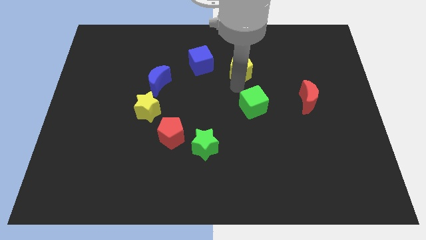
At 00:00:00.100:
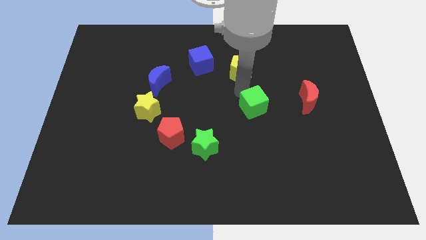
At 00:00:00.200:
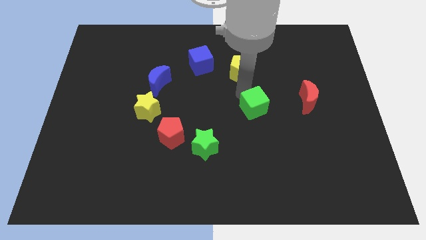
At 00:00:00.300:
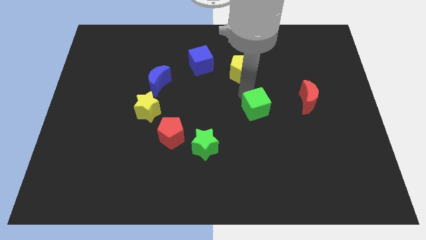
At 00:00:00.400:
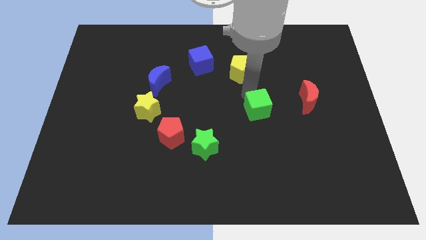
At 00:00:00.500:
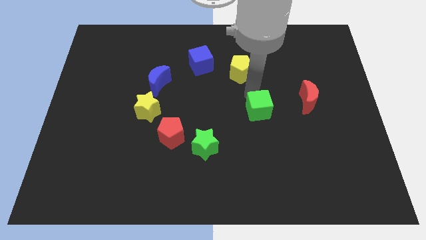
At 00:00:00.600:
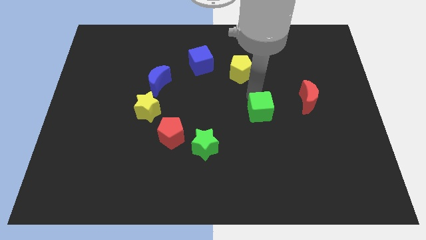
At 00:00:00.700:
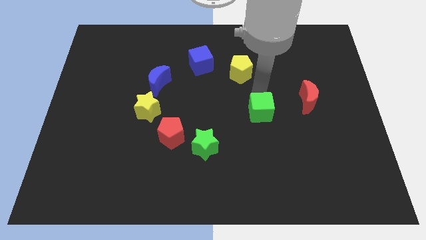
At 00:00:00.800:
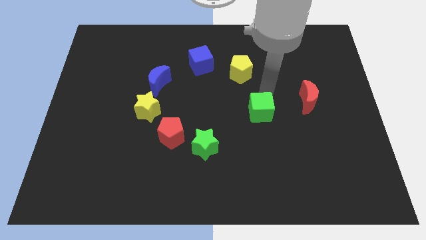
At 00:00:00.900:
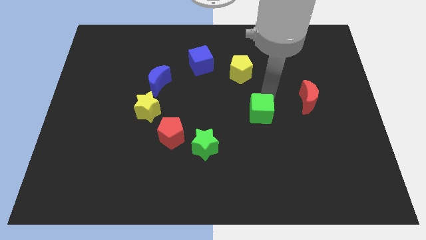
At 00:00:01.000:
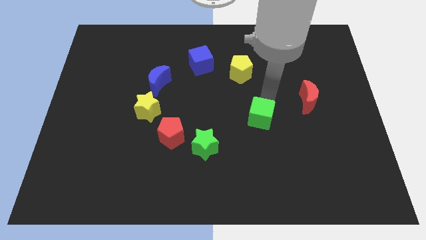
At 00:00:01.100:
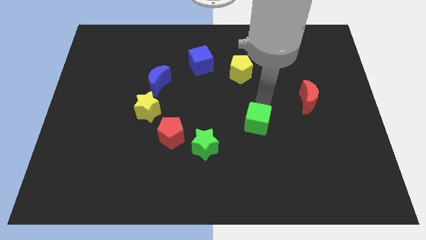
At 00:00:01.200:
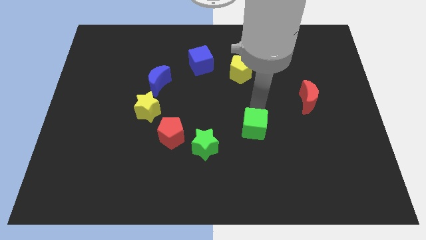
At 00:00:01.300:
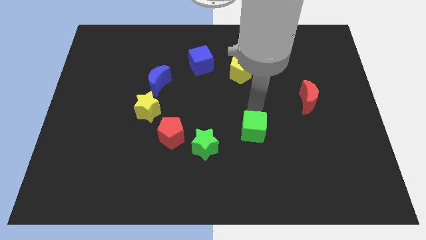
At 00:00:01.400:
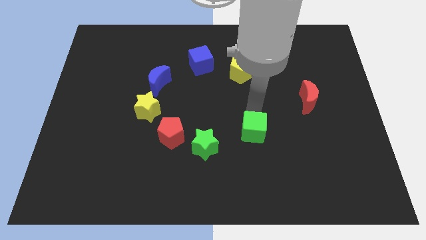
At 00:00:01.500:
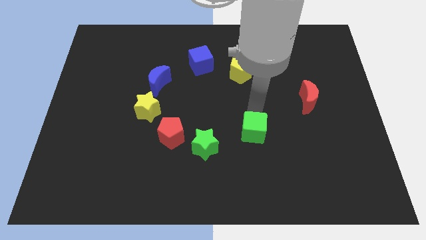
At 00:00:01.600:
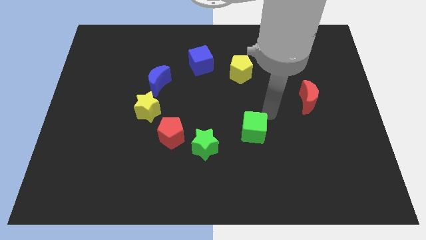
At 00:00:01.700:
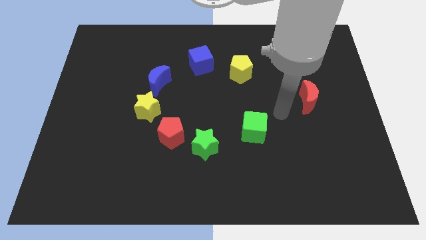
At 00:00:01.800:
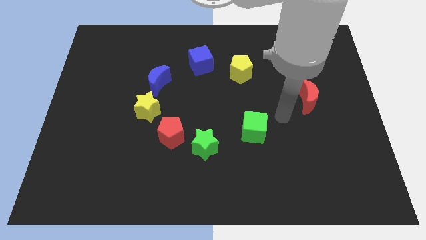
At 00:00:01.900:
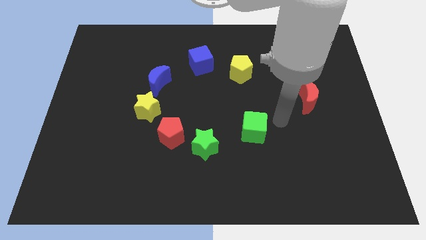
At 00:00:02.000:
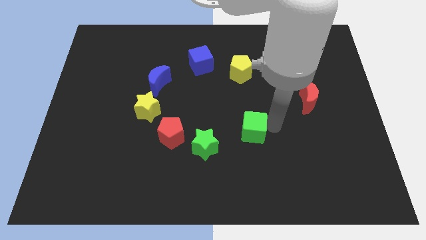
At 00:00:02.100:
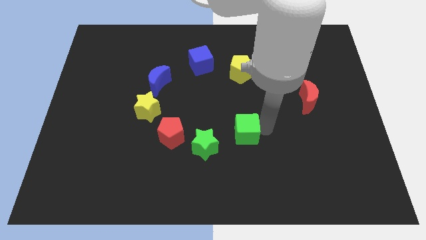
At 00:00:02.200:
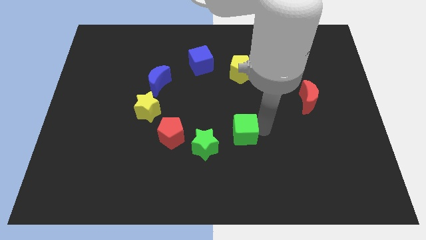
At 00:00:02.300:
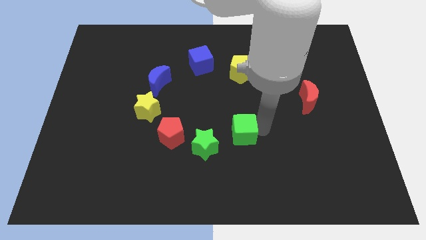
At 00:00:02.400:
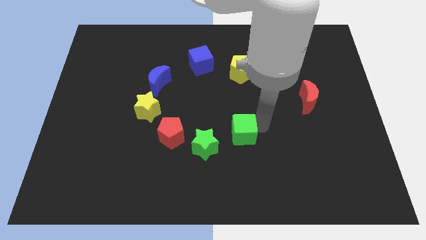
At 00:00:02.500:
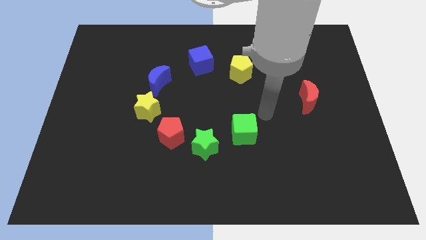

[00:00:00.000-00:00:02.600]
place the green cube top right to the green star

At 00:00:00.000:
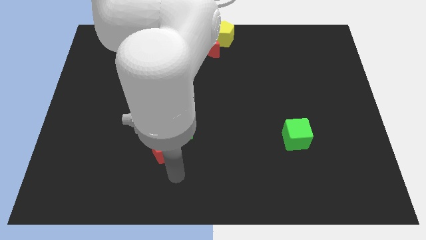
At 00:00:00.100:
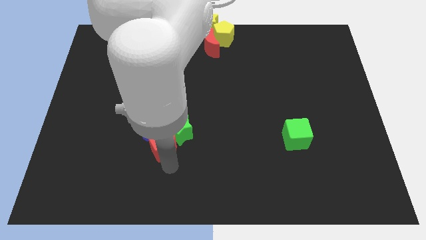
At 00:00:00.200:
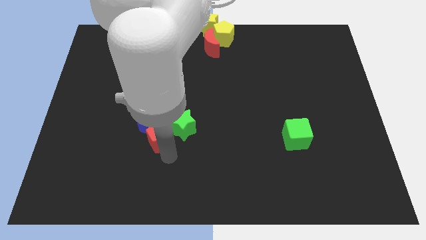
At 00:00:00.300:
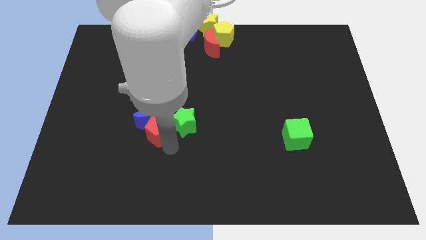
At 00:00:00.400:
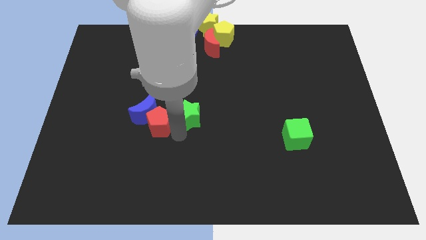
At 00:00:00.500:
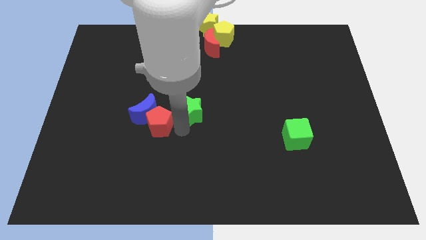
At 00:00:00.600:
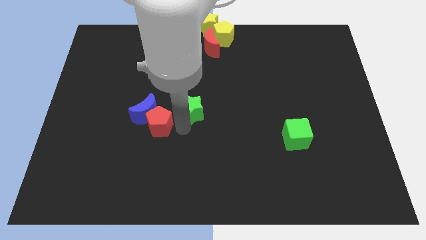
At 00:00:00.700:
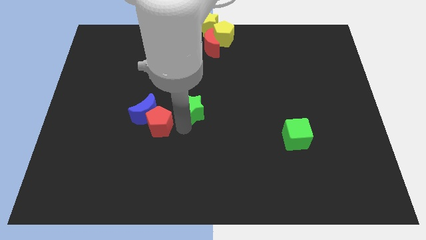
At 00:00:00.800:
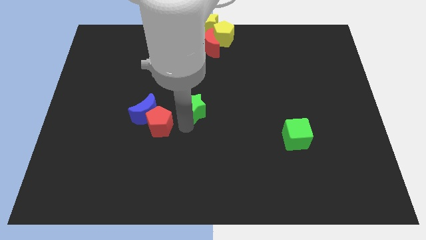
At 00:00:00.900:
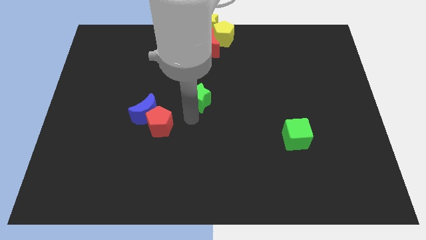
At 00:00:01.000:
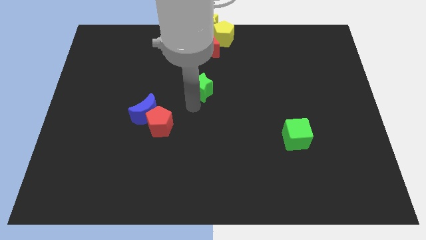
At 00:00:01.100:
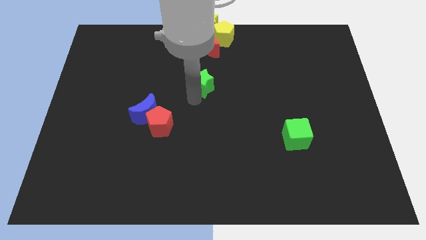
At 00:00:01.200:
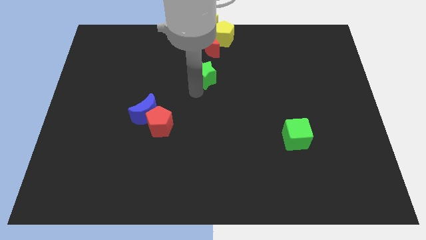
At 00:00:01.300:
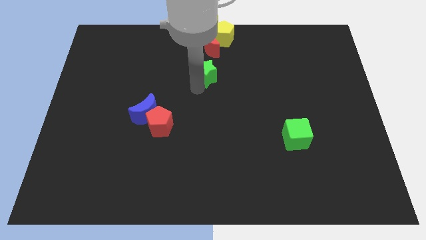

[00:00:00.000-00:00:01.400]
separate the green star from red pentagon

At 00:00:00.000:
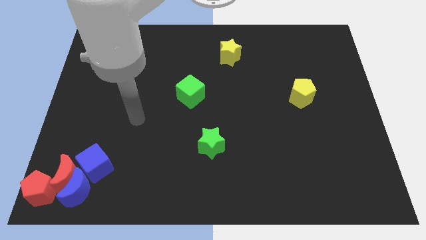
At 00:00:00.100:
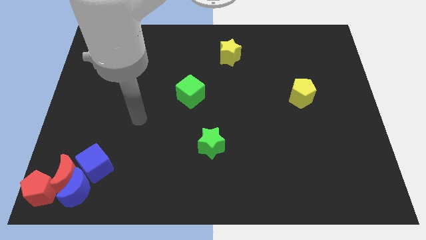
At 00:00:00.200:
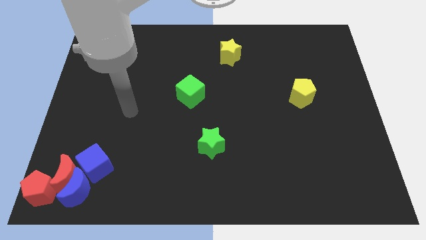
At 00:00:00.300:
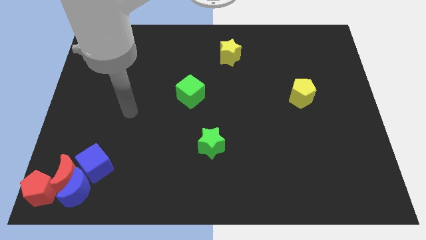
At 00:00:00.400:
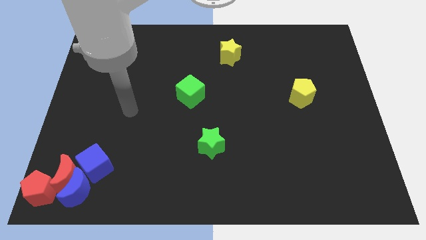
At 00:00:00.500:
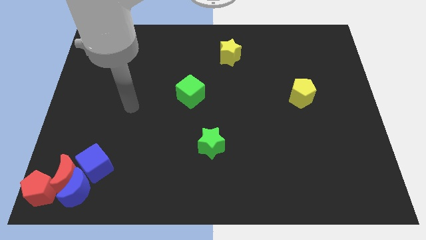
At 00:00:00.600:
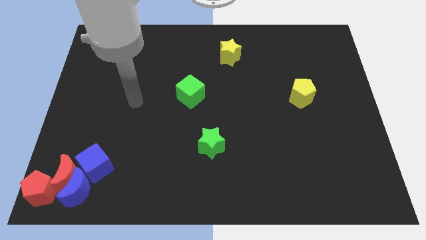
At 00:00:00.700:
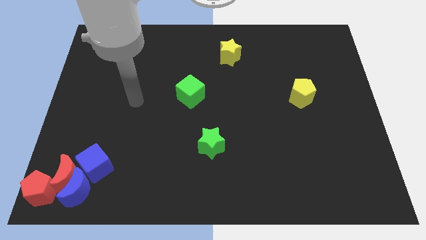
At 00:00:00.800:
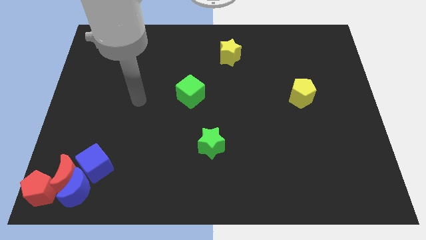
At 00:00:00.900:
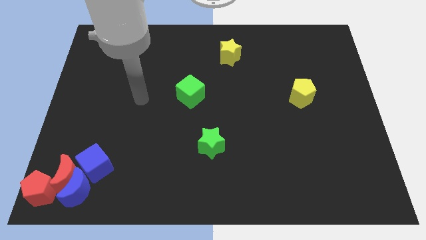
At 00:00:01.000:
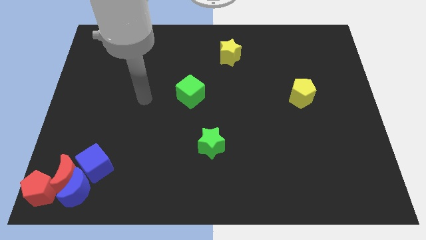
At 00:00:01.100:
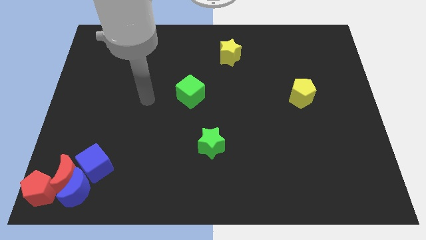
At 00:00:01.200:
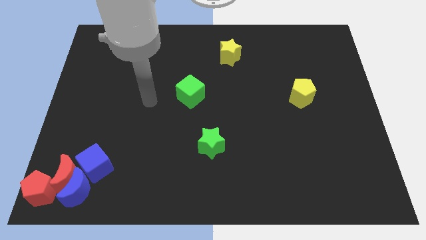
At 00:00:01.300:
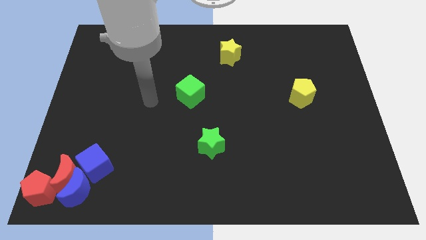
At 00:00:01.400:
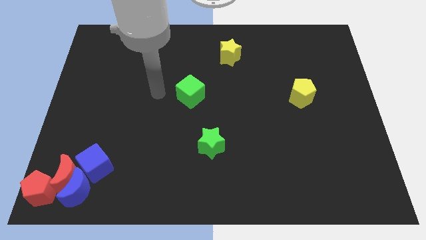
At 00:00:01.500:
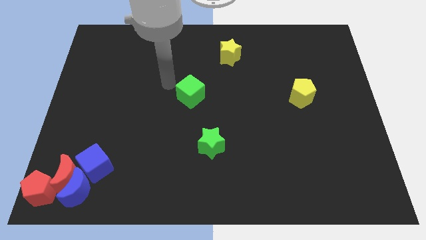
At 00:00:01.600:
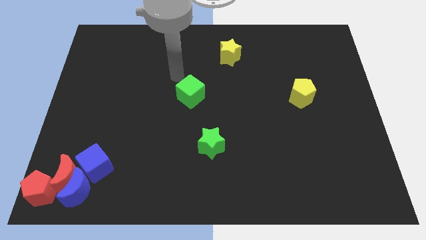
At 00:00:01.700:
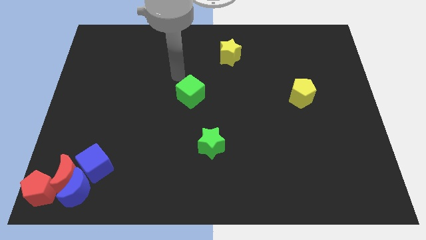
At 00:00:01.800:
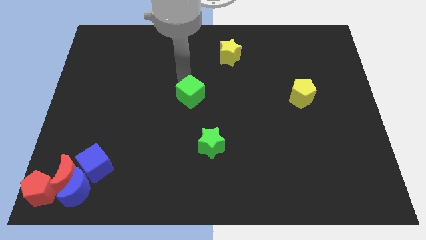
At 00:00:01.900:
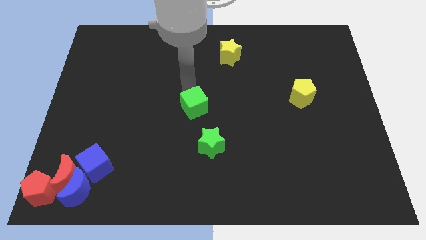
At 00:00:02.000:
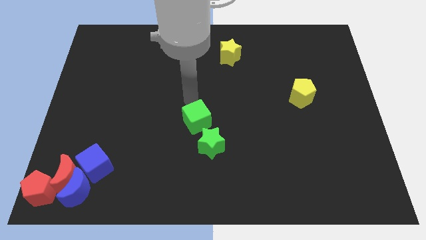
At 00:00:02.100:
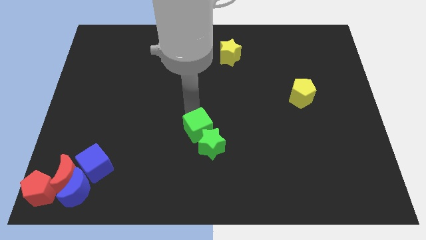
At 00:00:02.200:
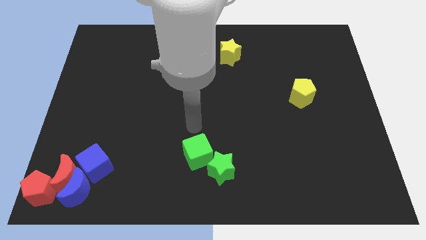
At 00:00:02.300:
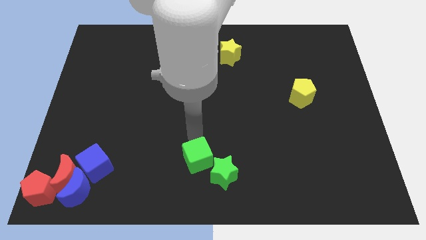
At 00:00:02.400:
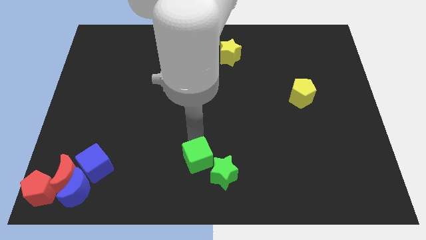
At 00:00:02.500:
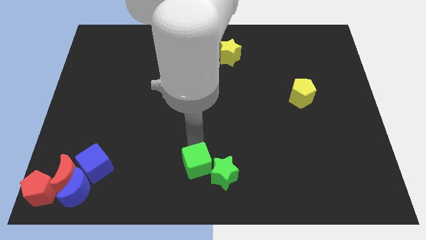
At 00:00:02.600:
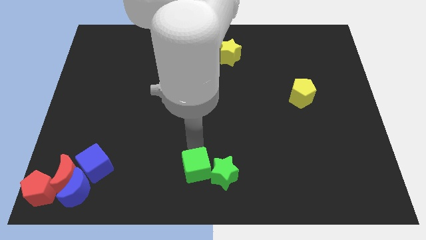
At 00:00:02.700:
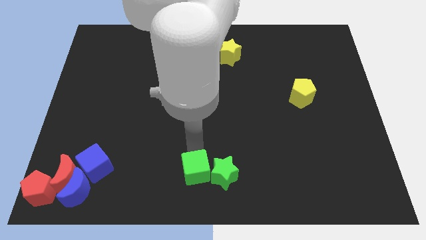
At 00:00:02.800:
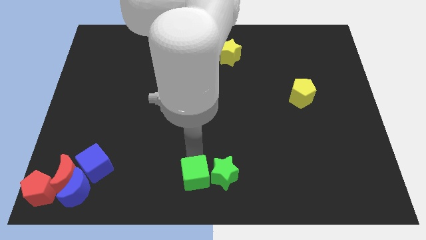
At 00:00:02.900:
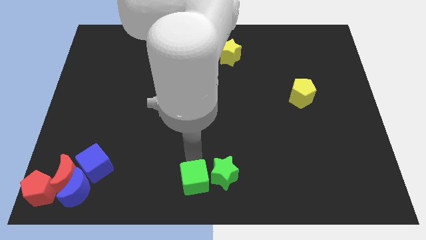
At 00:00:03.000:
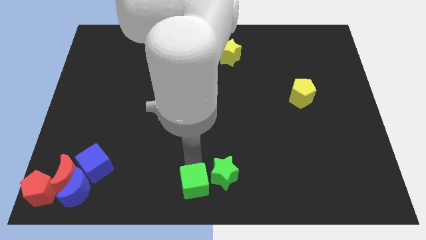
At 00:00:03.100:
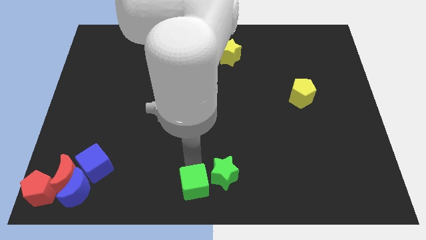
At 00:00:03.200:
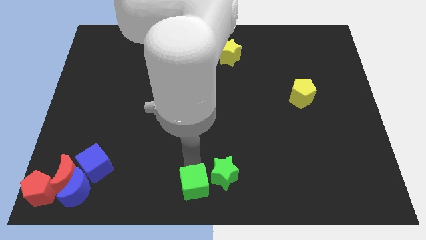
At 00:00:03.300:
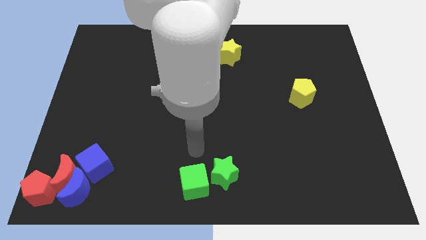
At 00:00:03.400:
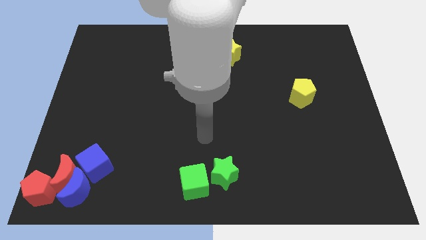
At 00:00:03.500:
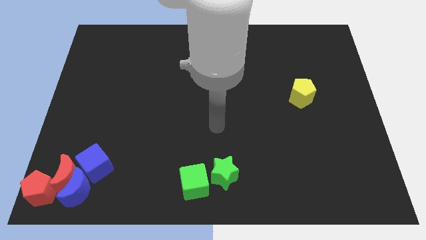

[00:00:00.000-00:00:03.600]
push the green cube to the left side of the green star

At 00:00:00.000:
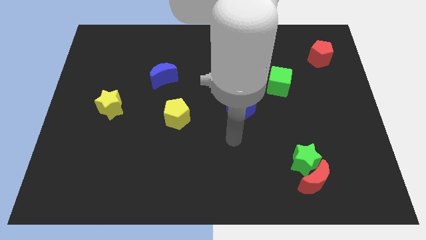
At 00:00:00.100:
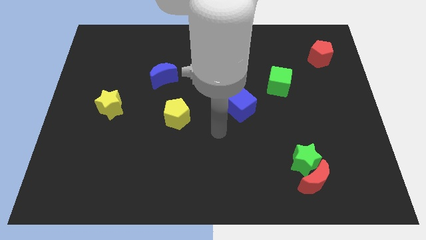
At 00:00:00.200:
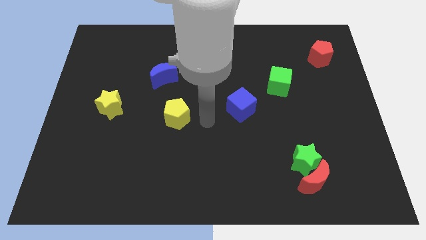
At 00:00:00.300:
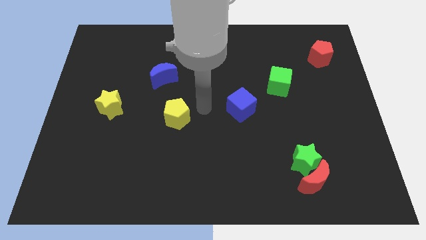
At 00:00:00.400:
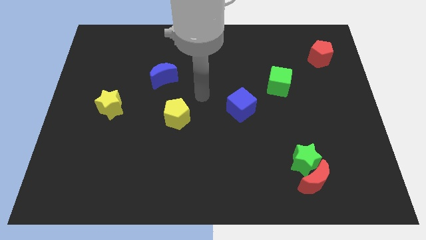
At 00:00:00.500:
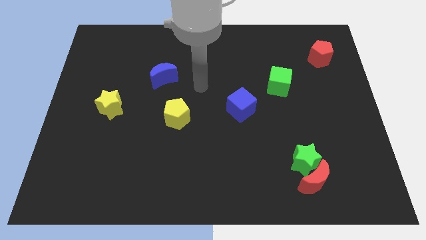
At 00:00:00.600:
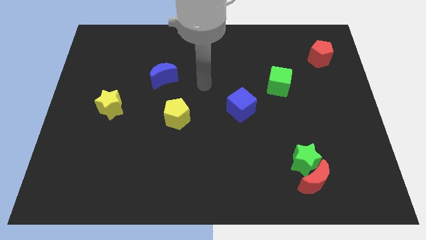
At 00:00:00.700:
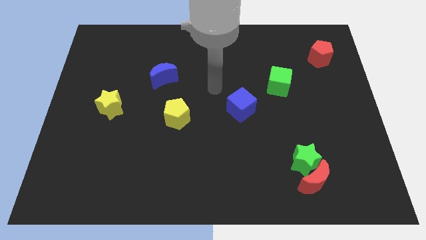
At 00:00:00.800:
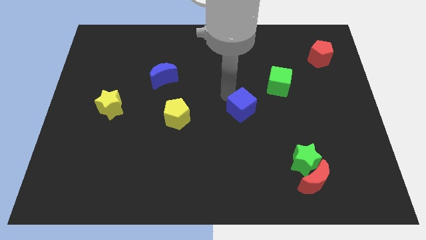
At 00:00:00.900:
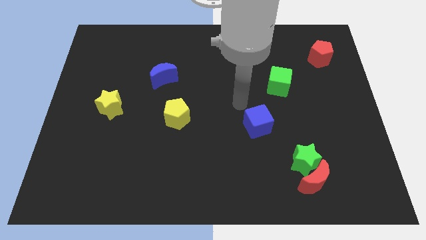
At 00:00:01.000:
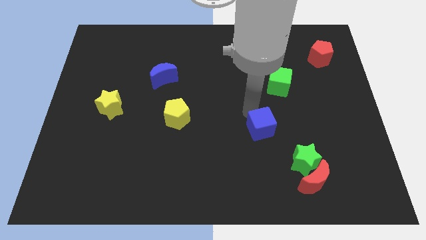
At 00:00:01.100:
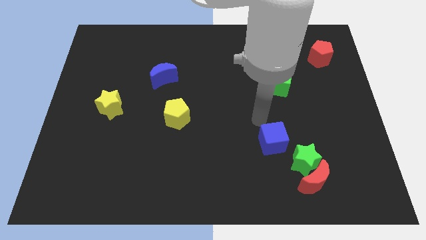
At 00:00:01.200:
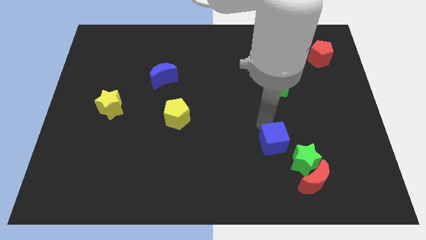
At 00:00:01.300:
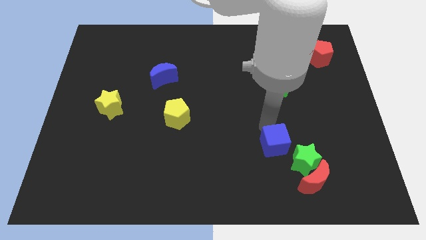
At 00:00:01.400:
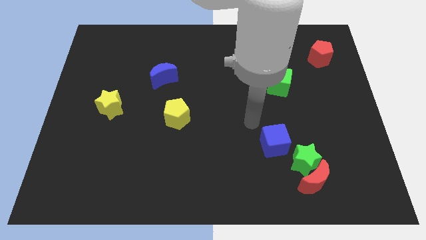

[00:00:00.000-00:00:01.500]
push the blue cube to the top left side of the green star
